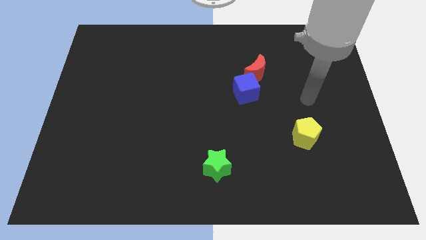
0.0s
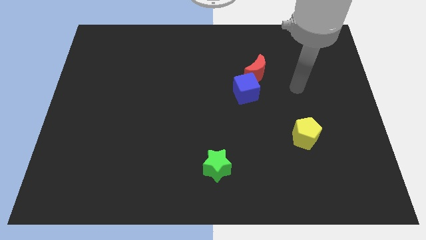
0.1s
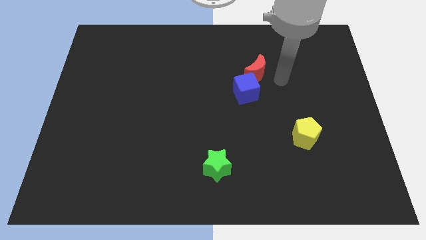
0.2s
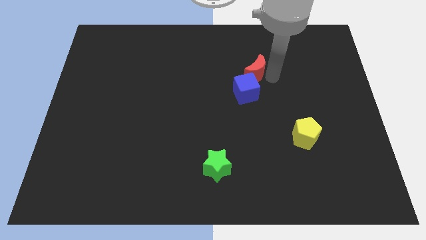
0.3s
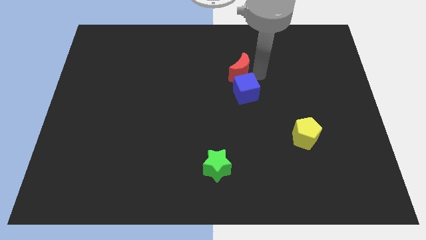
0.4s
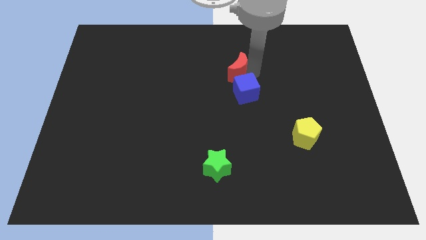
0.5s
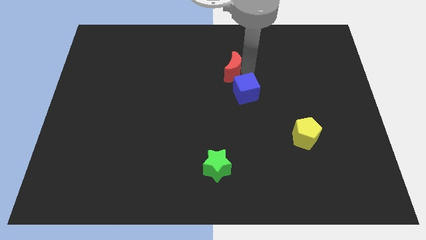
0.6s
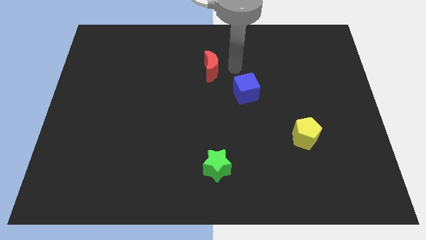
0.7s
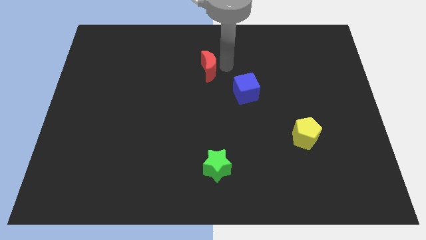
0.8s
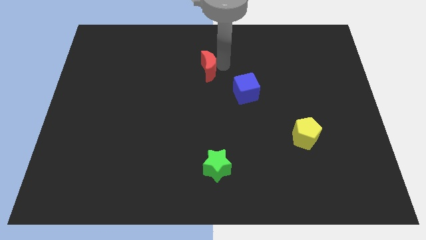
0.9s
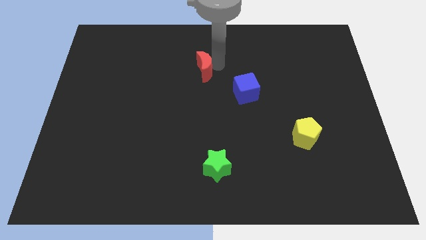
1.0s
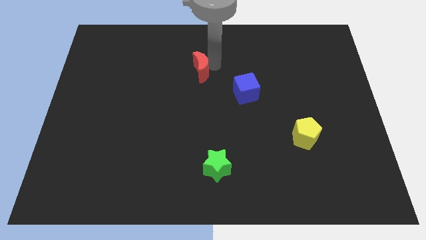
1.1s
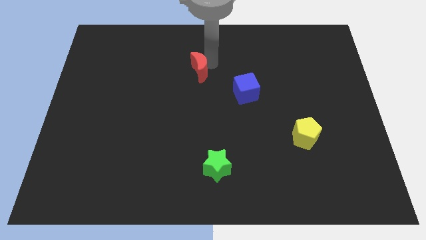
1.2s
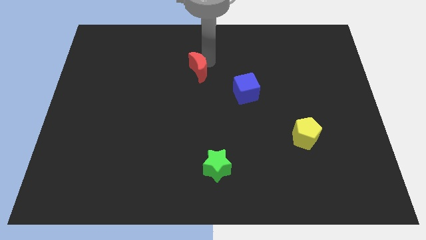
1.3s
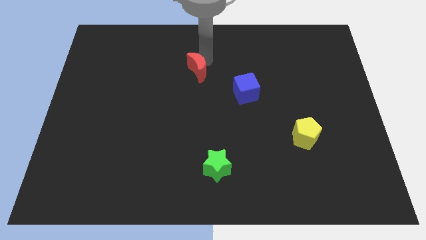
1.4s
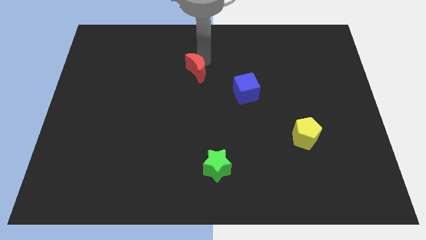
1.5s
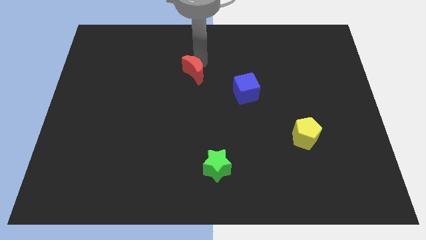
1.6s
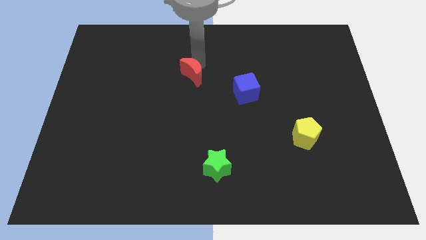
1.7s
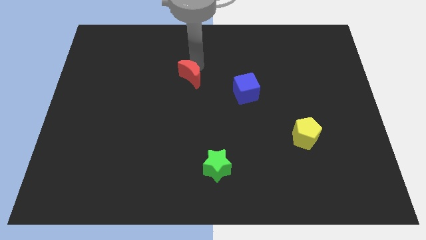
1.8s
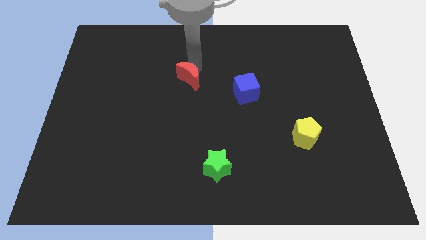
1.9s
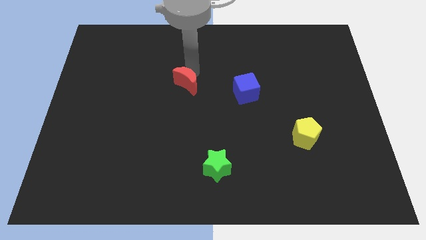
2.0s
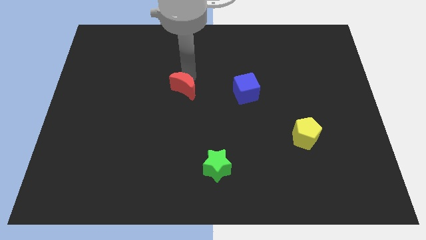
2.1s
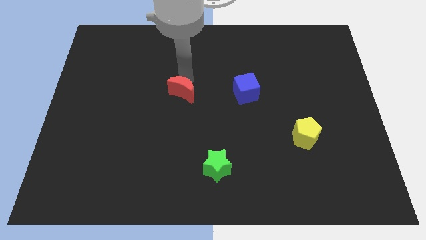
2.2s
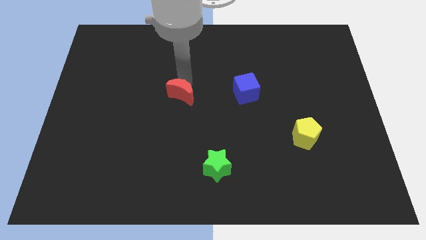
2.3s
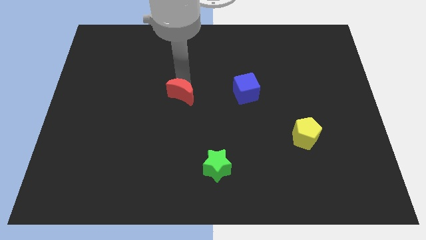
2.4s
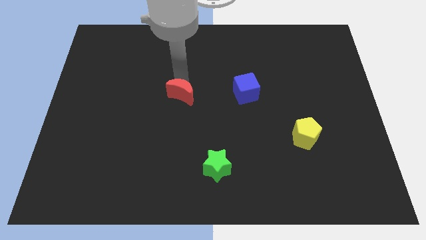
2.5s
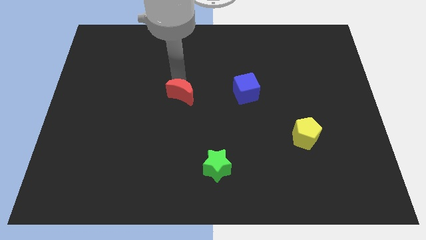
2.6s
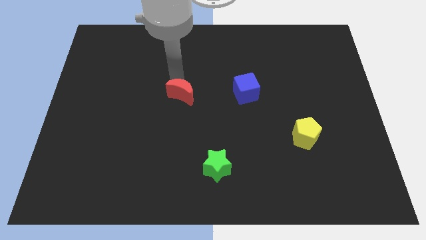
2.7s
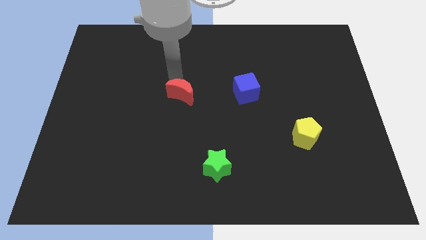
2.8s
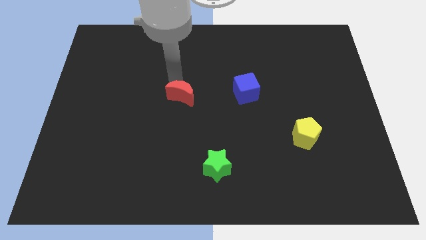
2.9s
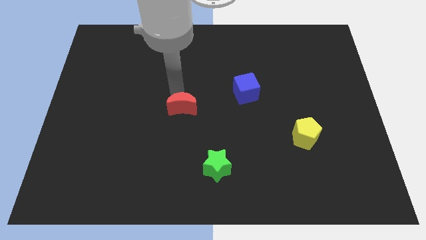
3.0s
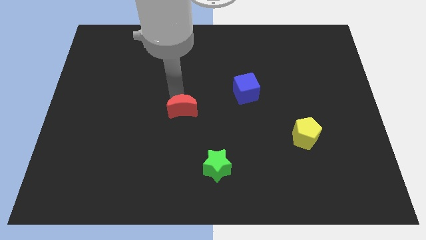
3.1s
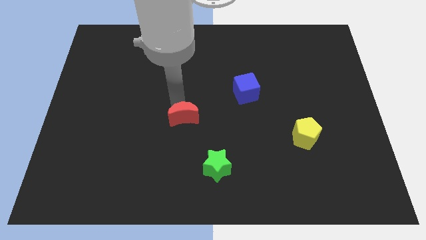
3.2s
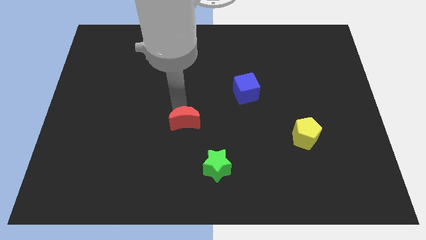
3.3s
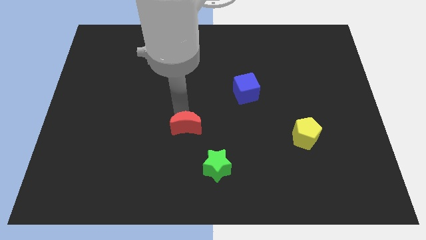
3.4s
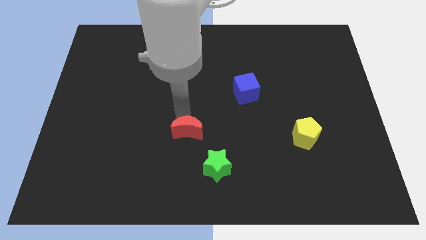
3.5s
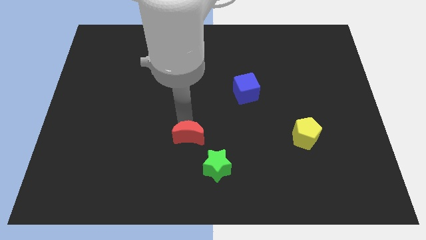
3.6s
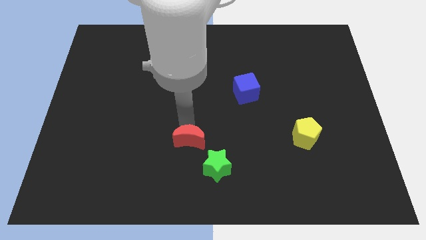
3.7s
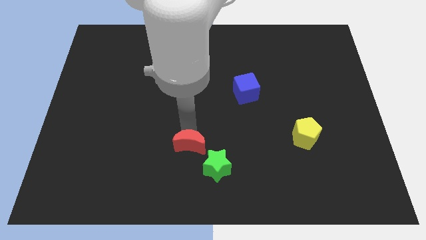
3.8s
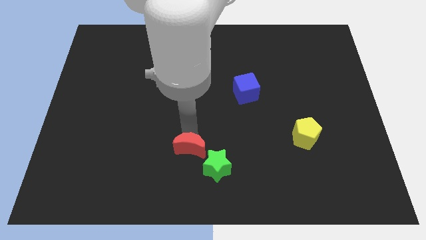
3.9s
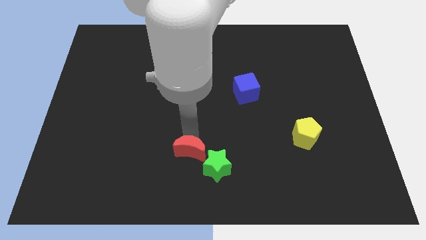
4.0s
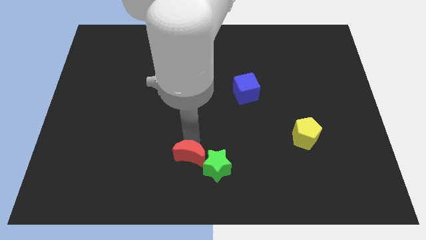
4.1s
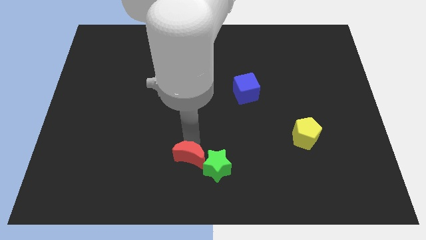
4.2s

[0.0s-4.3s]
slide the red moon next to the star

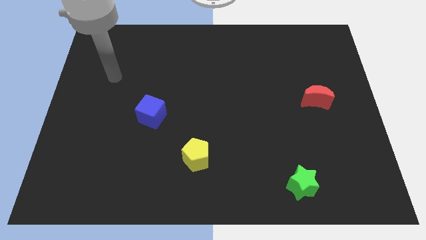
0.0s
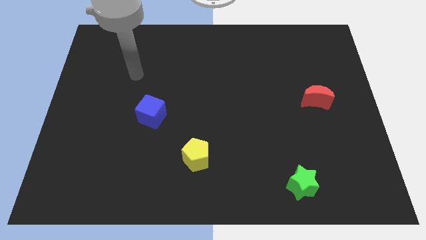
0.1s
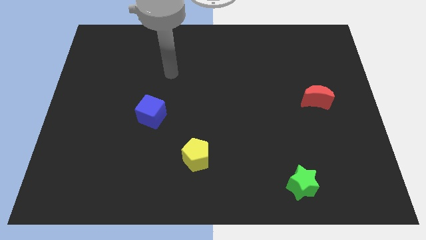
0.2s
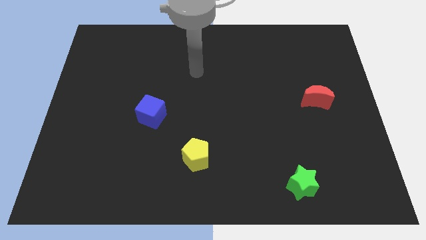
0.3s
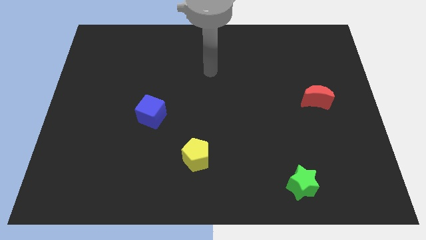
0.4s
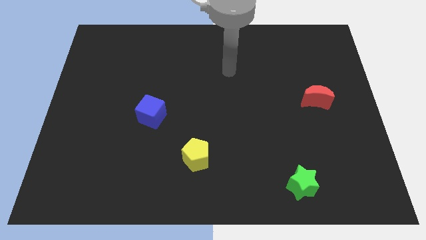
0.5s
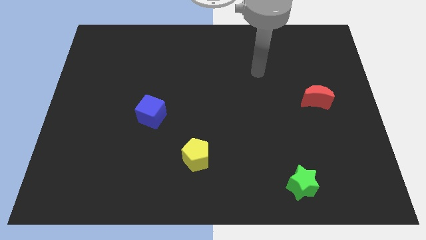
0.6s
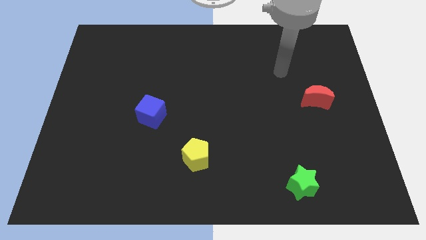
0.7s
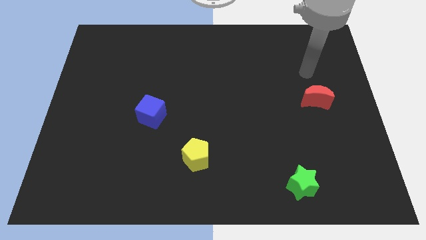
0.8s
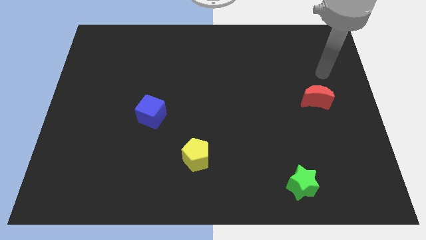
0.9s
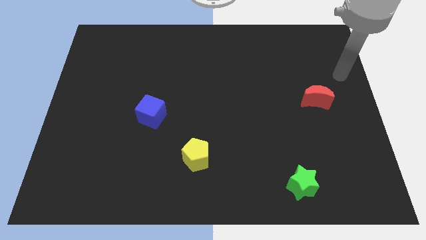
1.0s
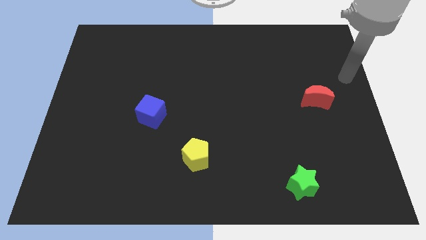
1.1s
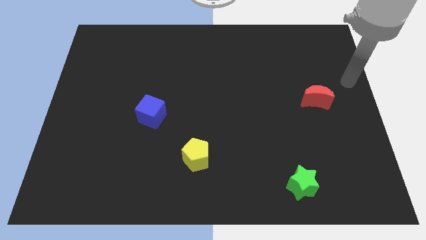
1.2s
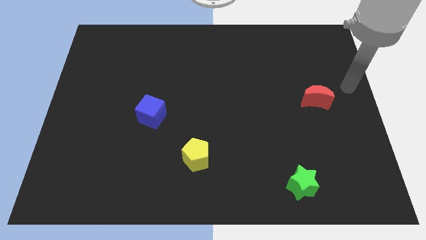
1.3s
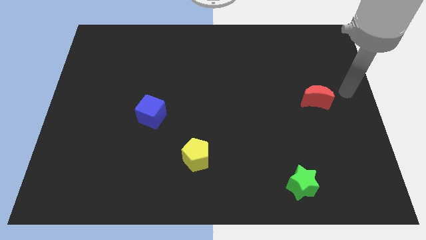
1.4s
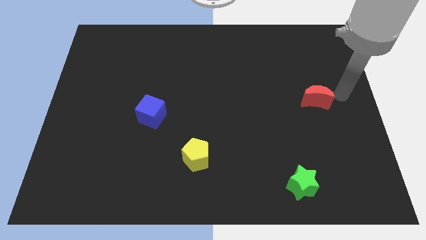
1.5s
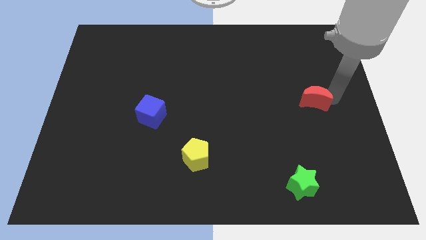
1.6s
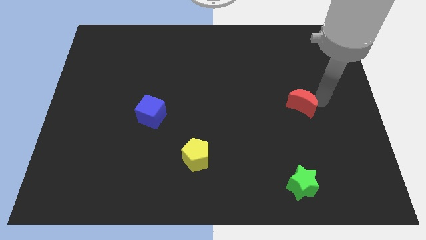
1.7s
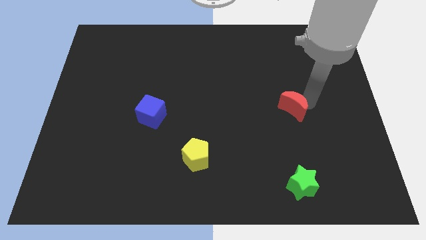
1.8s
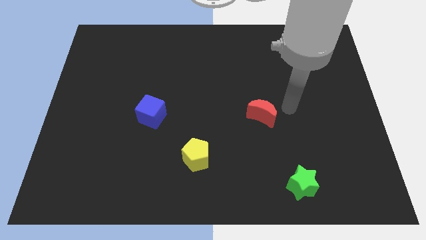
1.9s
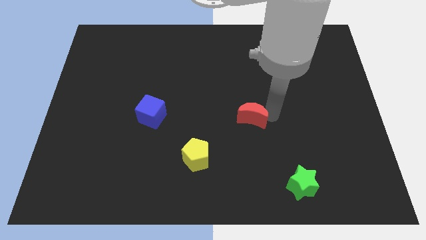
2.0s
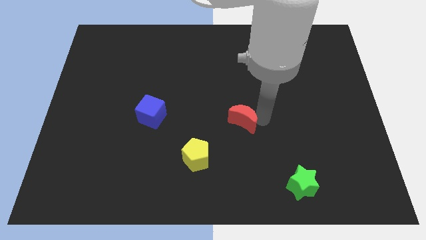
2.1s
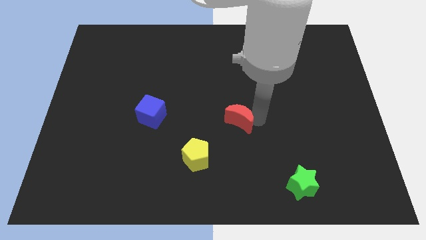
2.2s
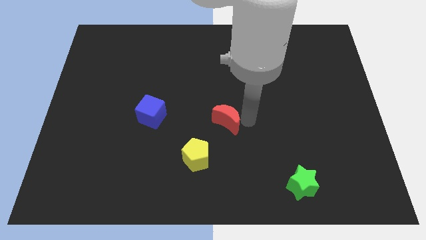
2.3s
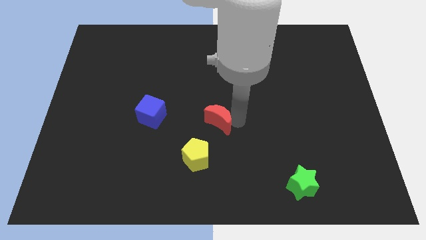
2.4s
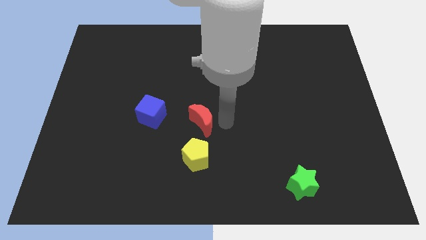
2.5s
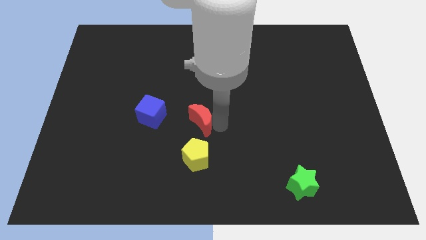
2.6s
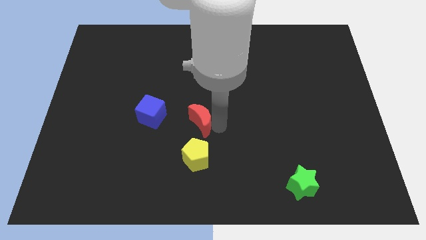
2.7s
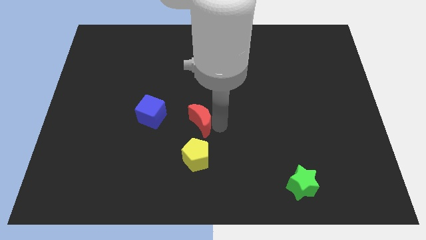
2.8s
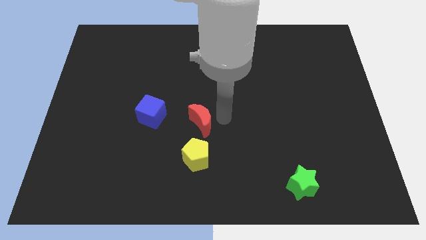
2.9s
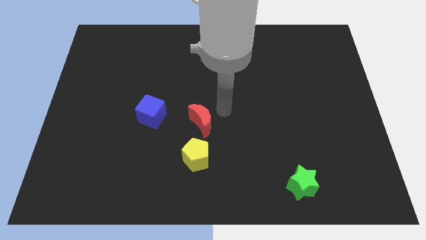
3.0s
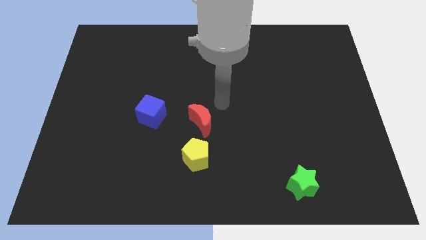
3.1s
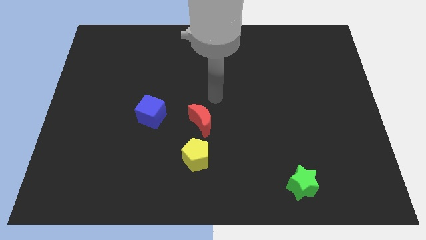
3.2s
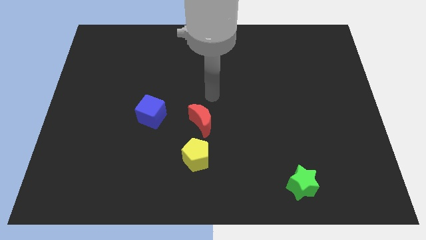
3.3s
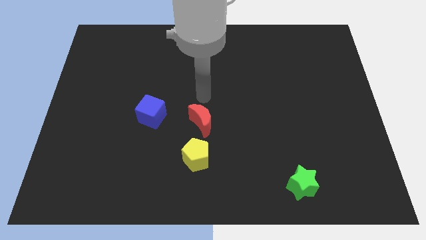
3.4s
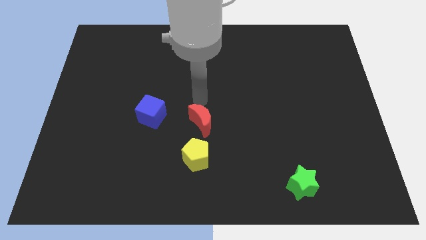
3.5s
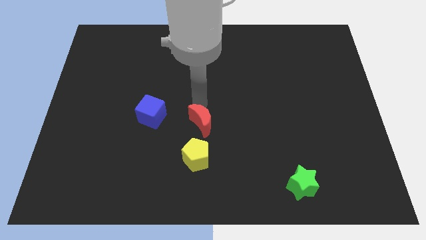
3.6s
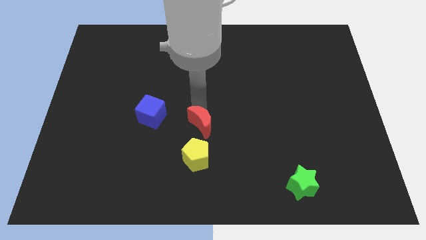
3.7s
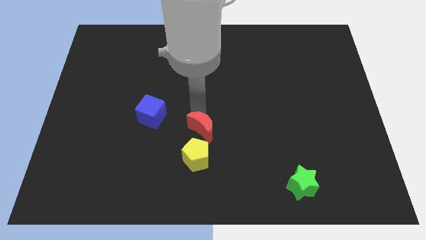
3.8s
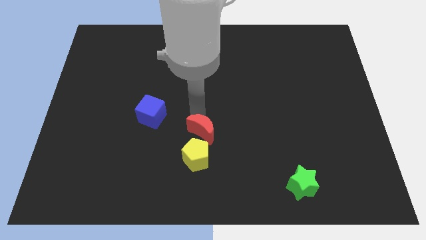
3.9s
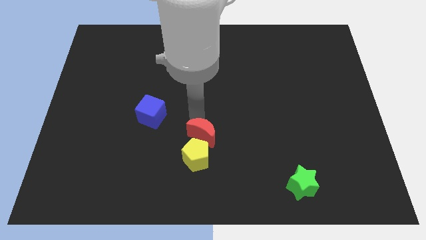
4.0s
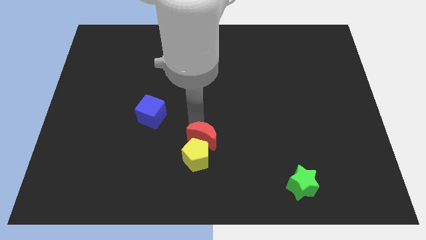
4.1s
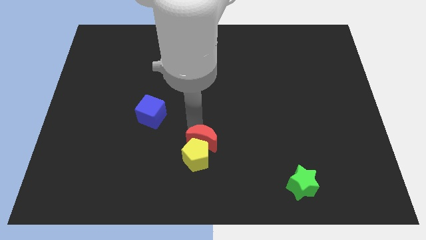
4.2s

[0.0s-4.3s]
move the red moon next to the pentagon
